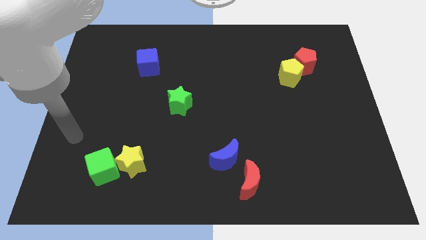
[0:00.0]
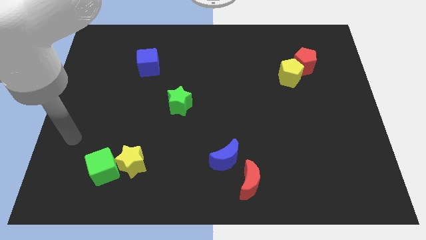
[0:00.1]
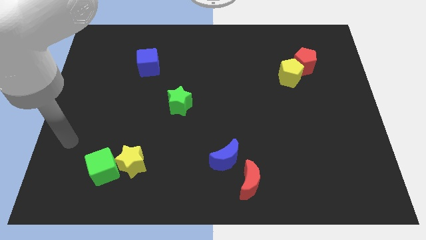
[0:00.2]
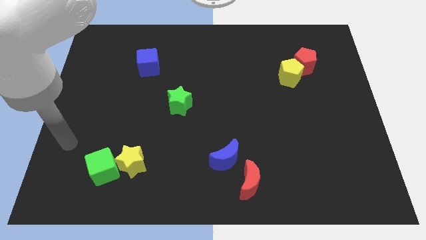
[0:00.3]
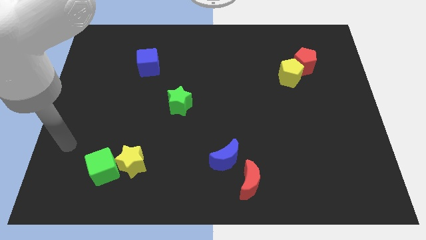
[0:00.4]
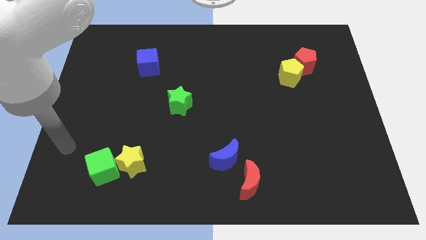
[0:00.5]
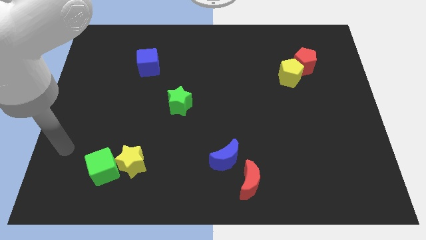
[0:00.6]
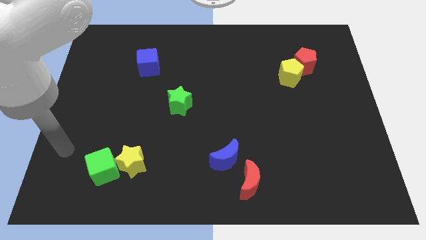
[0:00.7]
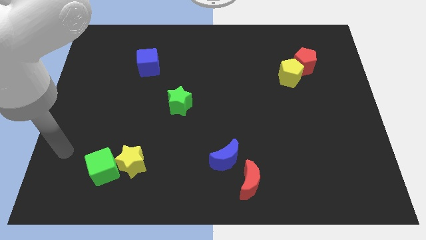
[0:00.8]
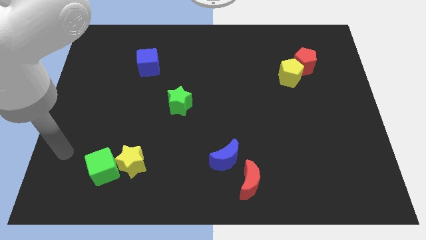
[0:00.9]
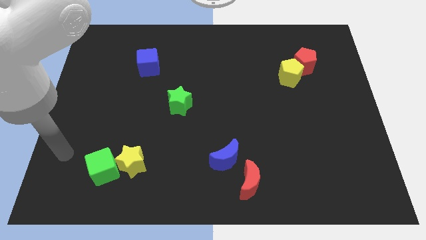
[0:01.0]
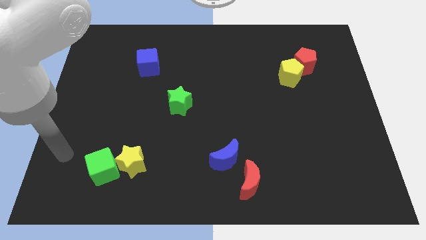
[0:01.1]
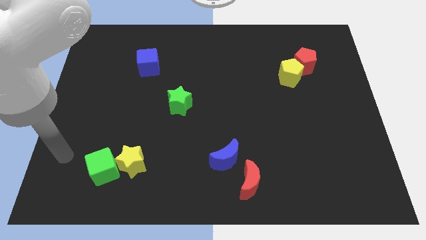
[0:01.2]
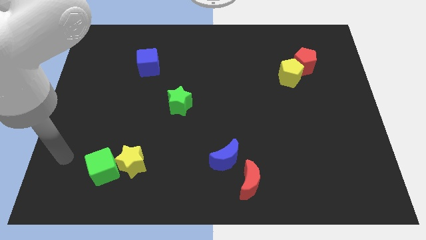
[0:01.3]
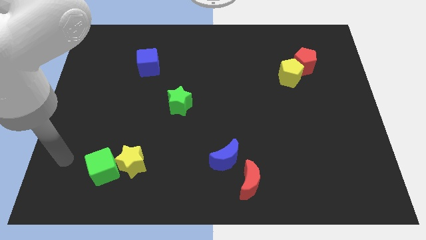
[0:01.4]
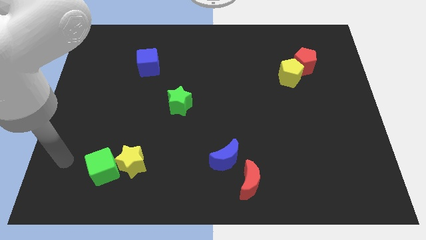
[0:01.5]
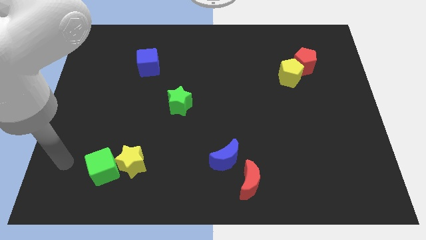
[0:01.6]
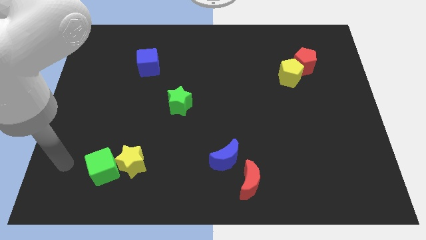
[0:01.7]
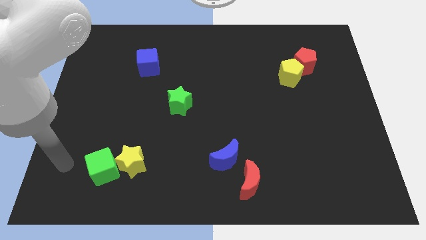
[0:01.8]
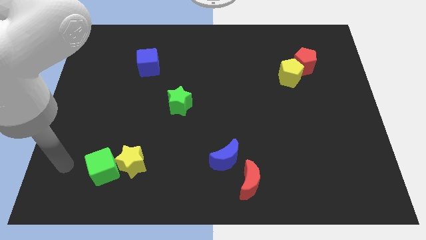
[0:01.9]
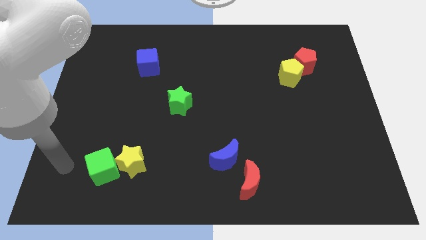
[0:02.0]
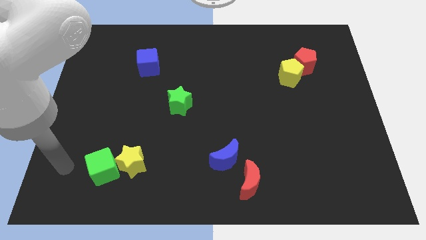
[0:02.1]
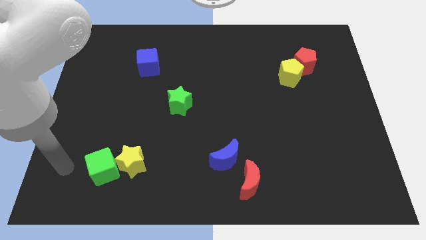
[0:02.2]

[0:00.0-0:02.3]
place your hand to the left of green cube

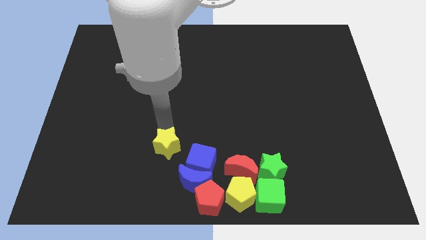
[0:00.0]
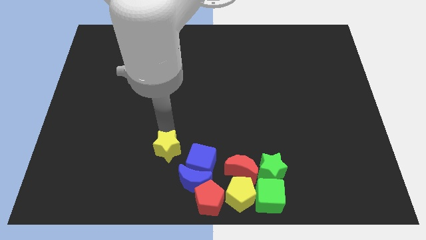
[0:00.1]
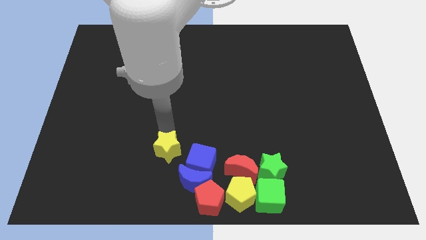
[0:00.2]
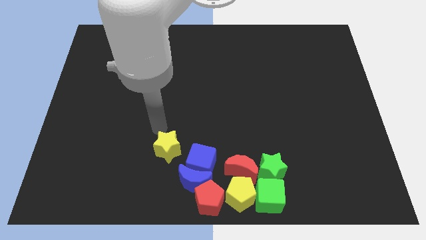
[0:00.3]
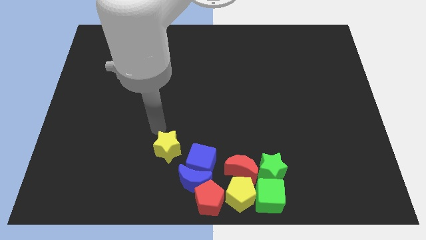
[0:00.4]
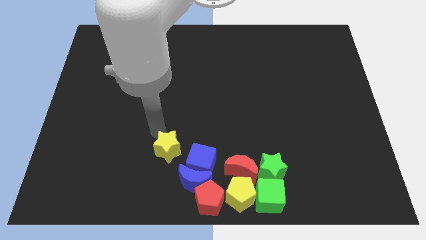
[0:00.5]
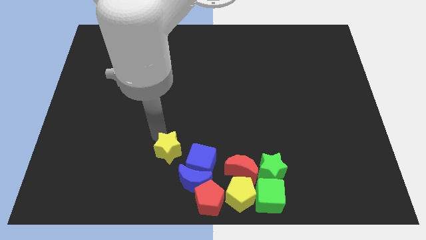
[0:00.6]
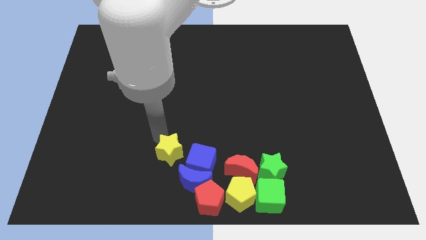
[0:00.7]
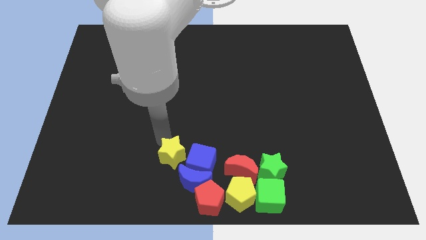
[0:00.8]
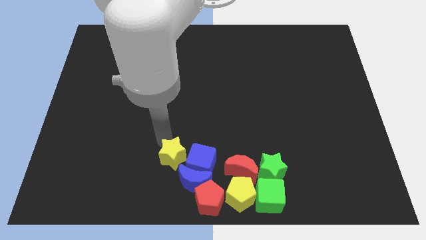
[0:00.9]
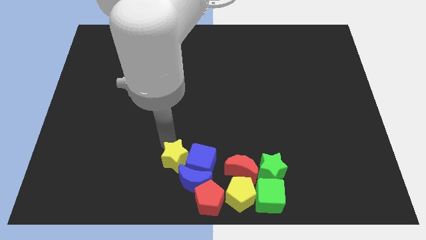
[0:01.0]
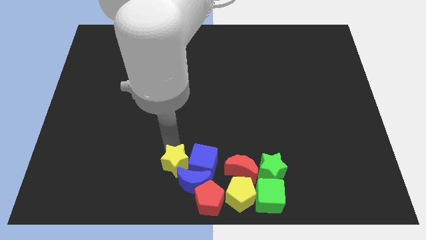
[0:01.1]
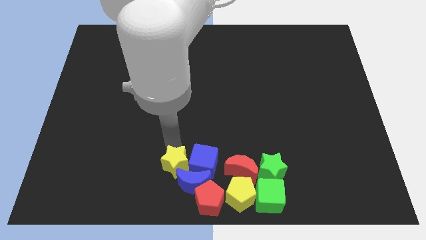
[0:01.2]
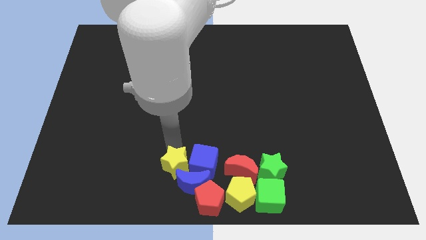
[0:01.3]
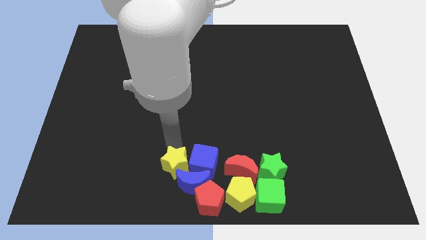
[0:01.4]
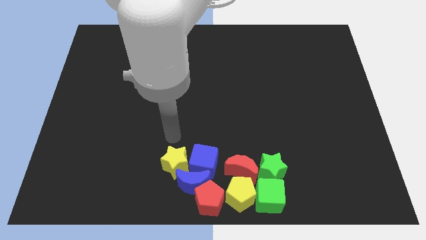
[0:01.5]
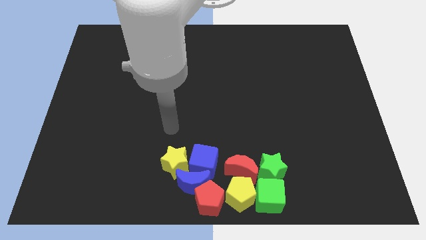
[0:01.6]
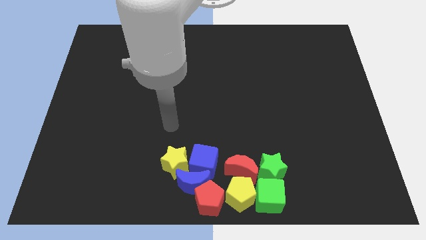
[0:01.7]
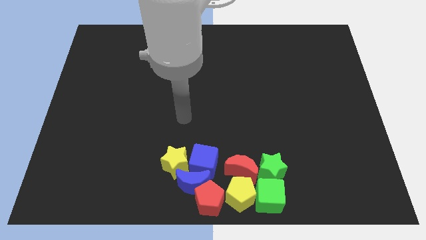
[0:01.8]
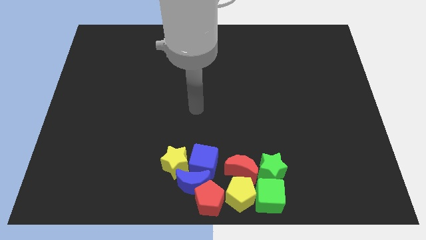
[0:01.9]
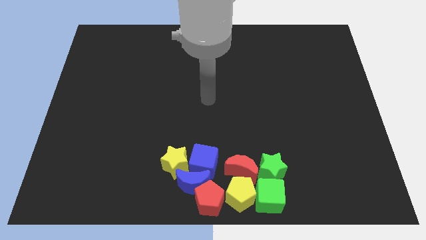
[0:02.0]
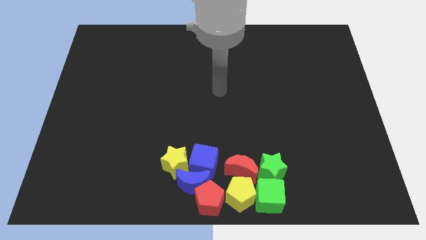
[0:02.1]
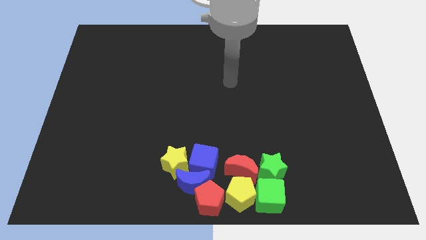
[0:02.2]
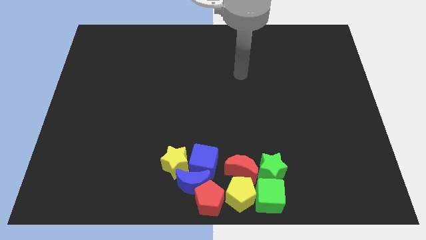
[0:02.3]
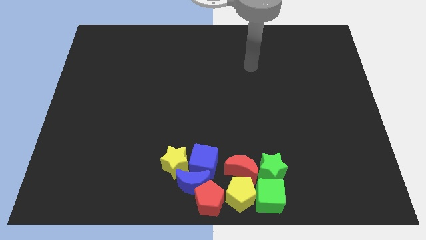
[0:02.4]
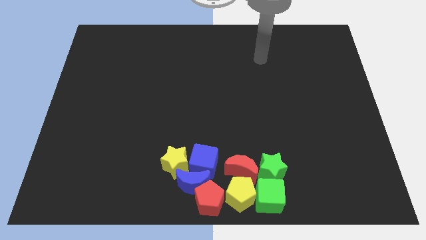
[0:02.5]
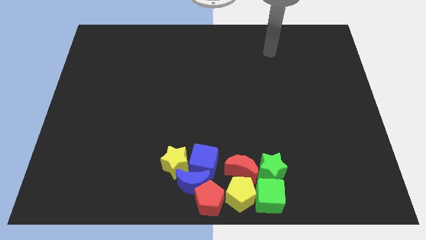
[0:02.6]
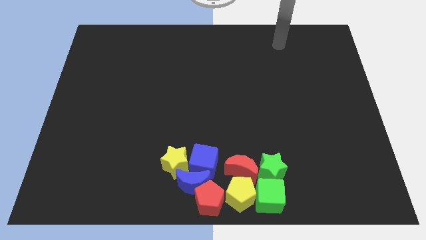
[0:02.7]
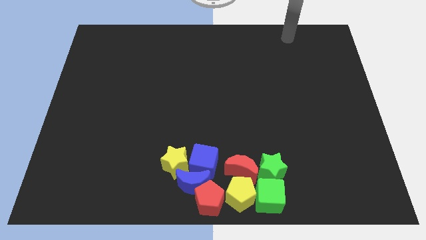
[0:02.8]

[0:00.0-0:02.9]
move the yellow star into the blue moon

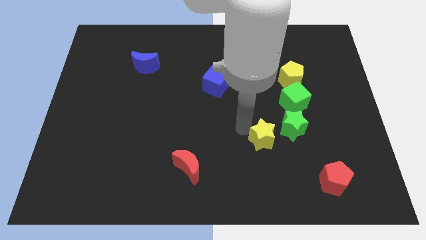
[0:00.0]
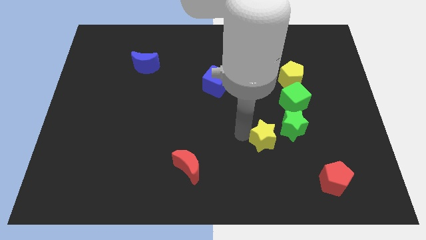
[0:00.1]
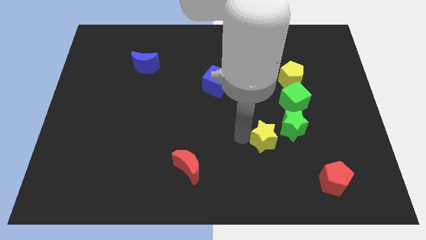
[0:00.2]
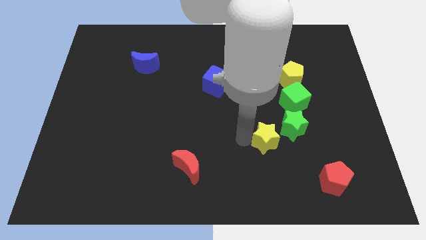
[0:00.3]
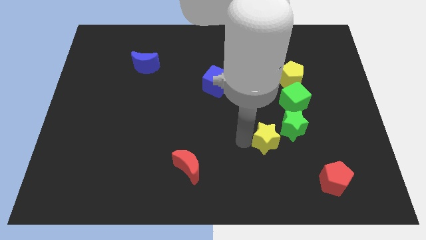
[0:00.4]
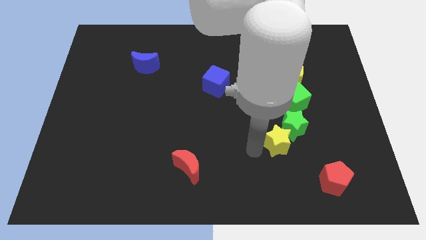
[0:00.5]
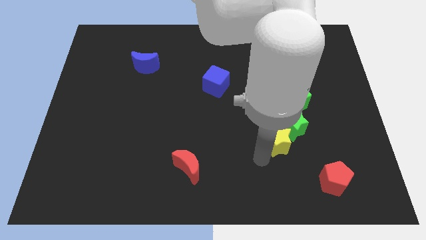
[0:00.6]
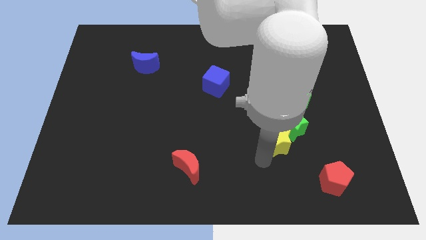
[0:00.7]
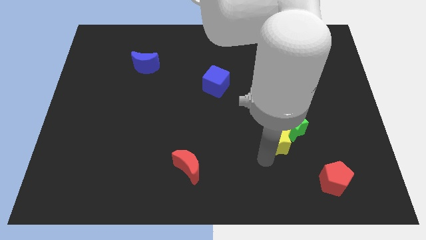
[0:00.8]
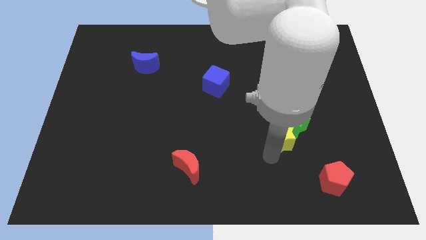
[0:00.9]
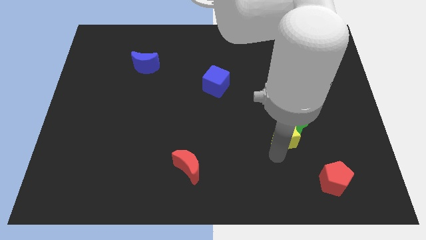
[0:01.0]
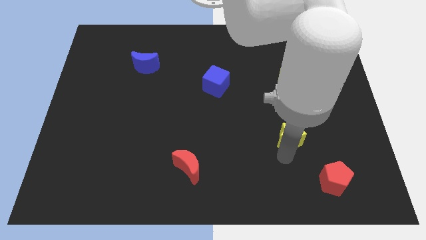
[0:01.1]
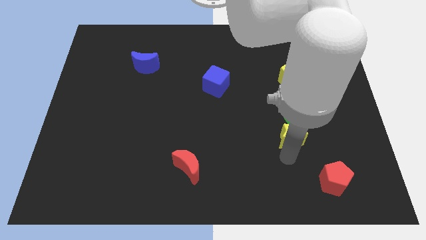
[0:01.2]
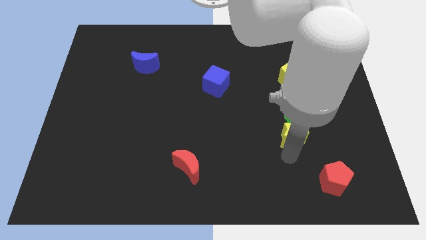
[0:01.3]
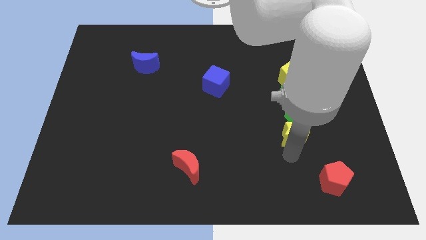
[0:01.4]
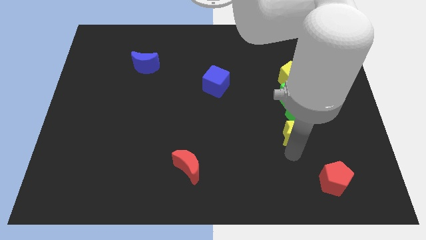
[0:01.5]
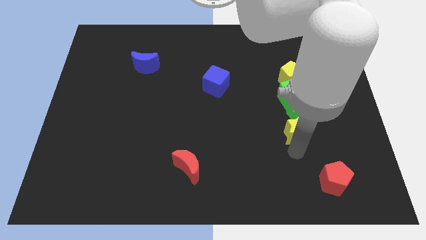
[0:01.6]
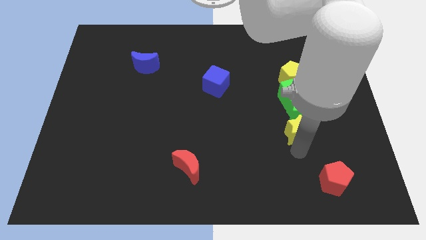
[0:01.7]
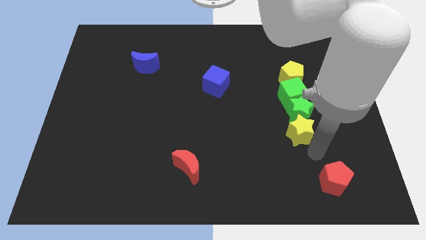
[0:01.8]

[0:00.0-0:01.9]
move the yellow star into the bottom side of the green star

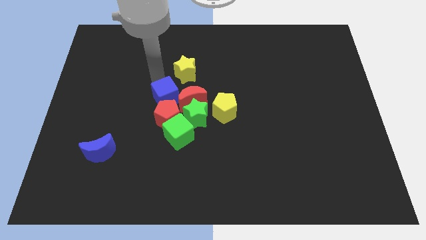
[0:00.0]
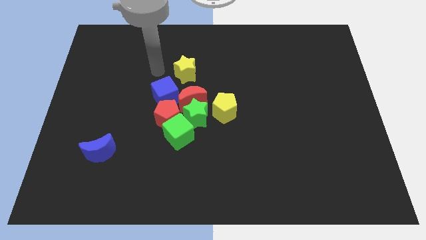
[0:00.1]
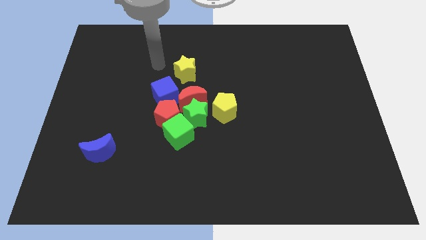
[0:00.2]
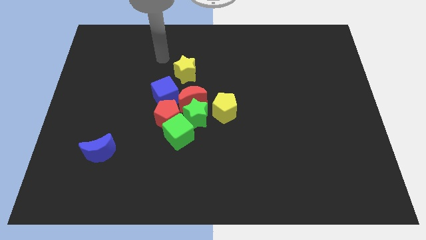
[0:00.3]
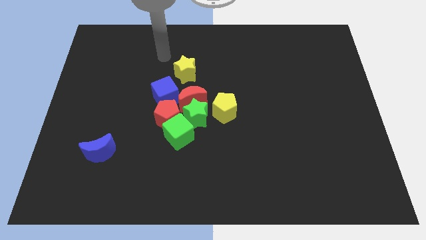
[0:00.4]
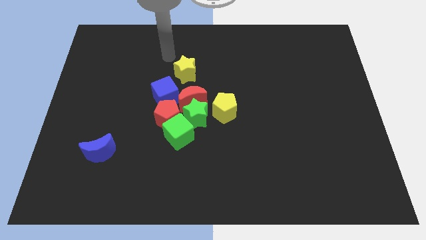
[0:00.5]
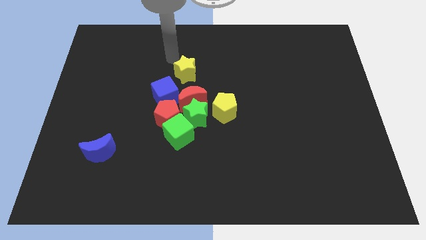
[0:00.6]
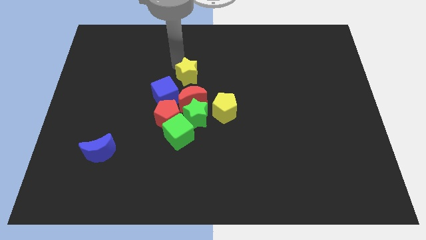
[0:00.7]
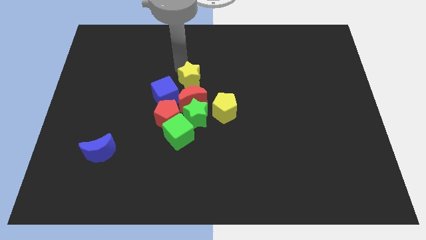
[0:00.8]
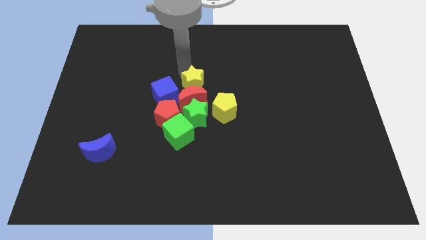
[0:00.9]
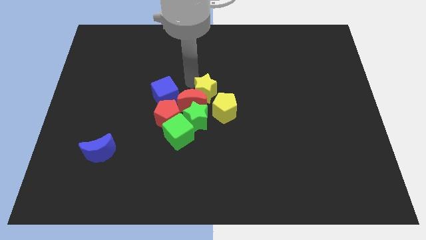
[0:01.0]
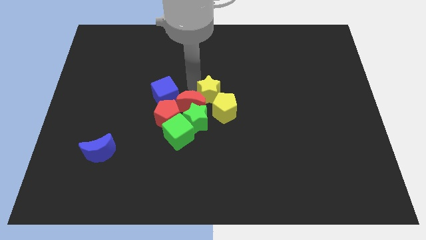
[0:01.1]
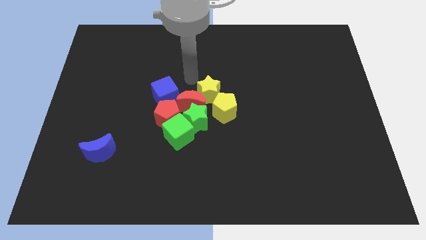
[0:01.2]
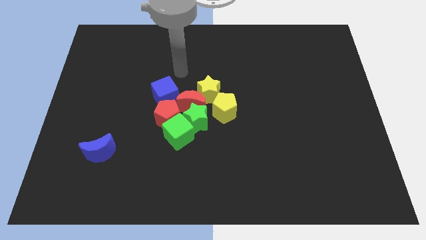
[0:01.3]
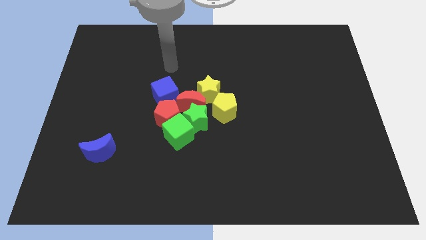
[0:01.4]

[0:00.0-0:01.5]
push the yellow star into the yellow pentagon

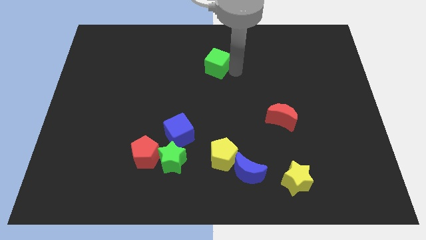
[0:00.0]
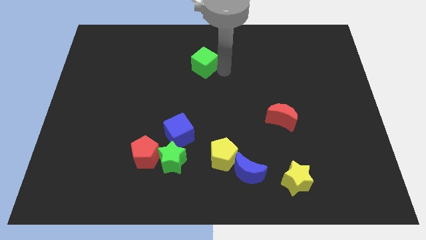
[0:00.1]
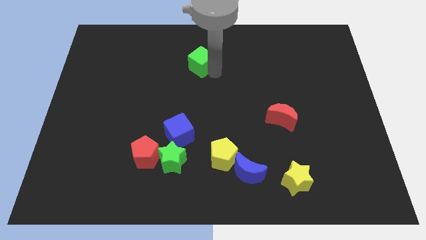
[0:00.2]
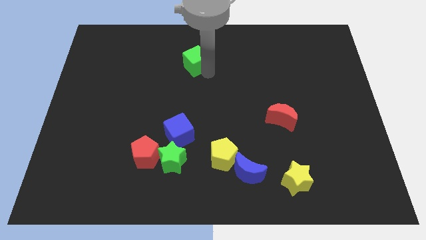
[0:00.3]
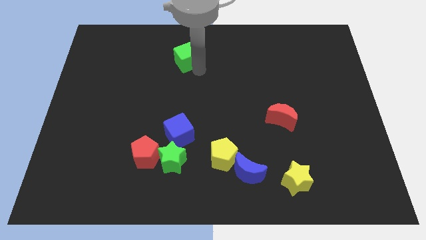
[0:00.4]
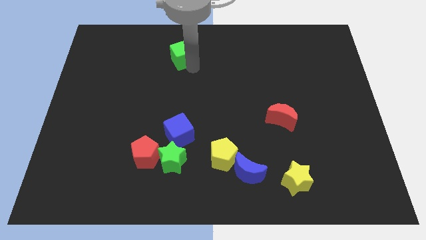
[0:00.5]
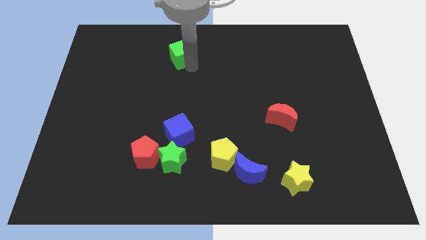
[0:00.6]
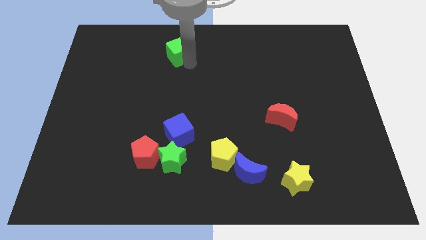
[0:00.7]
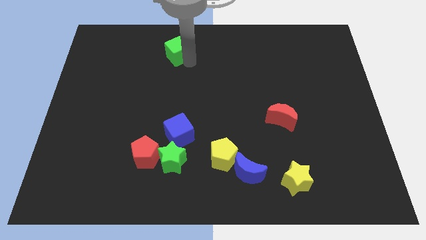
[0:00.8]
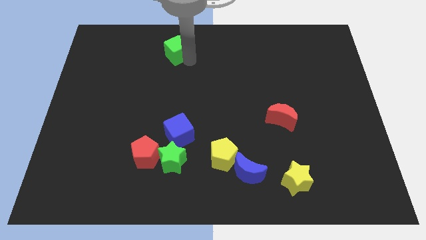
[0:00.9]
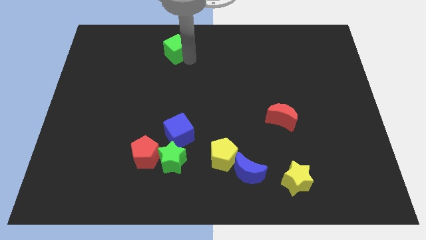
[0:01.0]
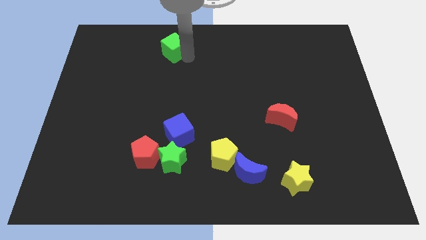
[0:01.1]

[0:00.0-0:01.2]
place the green cube to the top of the blue cube
